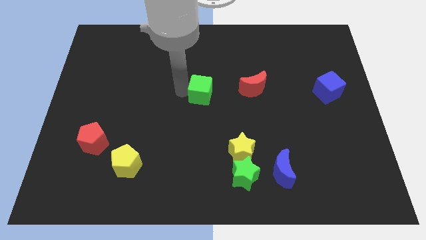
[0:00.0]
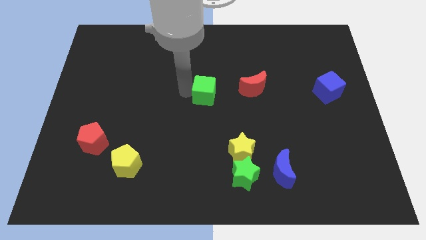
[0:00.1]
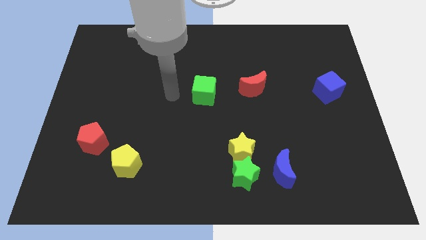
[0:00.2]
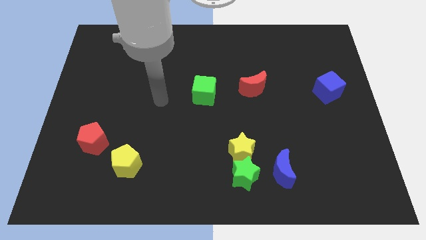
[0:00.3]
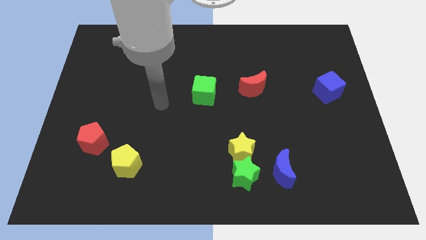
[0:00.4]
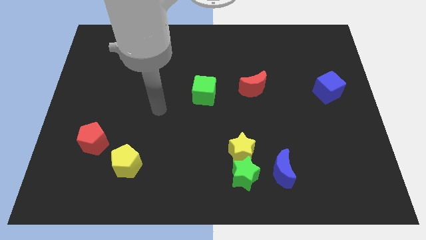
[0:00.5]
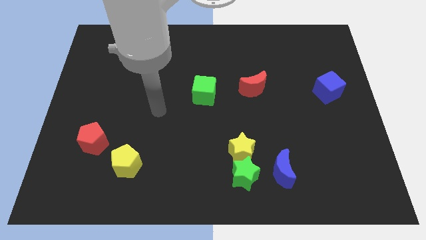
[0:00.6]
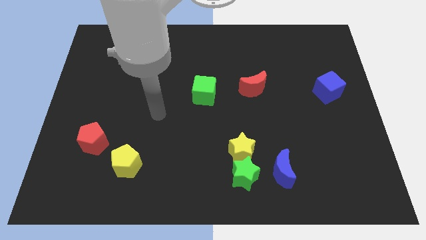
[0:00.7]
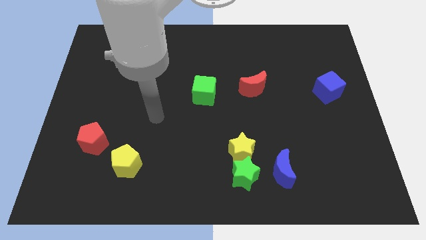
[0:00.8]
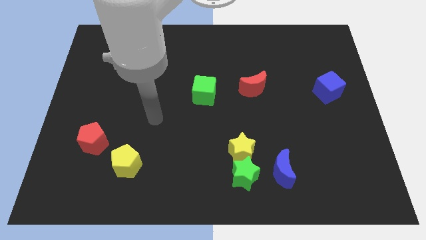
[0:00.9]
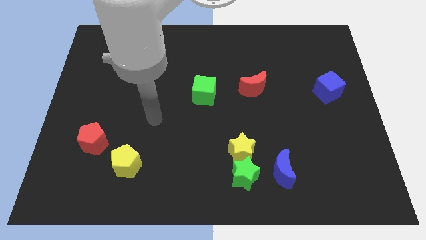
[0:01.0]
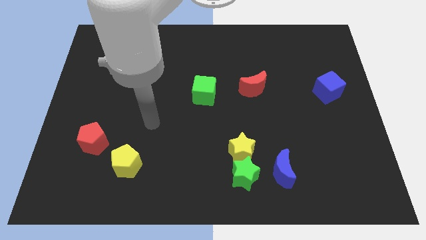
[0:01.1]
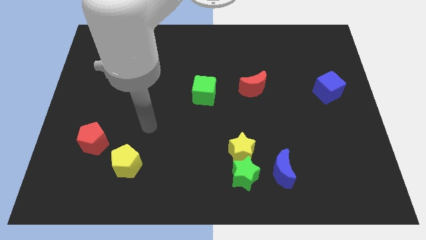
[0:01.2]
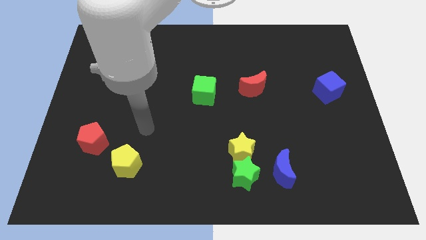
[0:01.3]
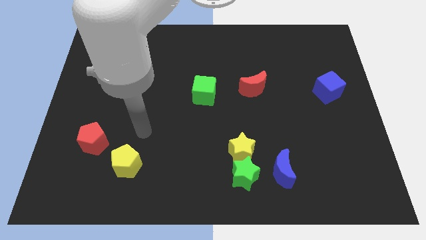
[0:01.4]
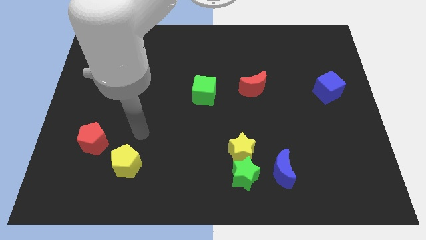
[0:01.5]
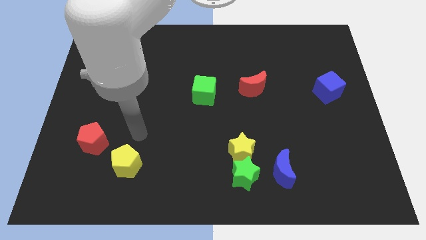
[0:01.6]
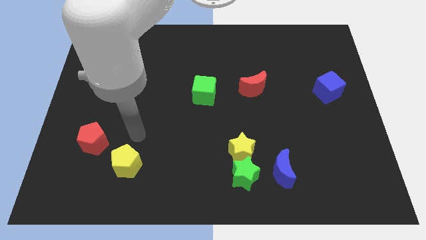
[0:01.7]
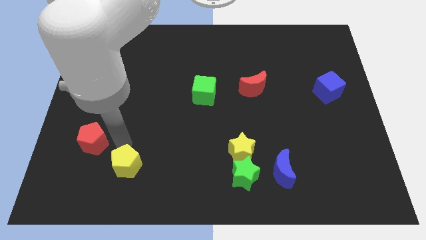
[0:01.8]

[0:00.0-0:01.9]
place your arm to the top of yellow pentagon

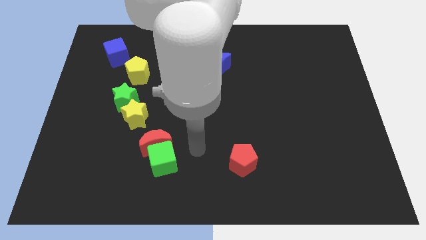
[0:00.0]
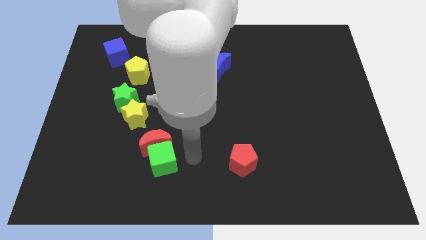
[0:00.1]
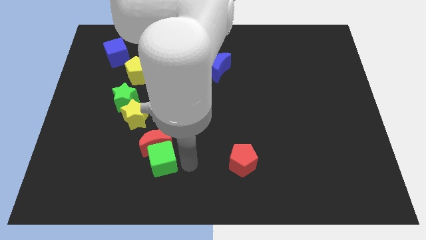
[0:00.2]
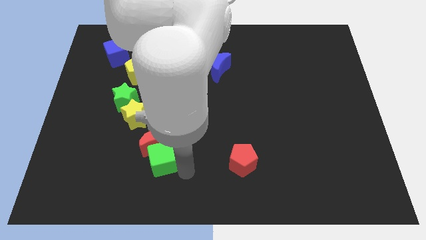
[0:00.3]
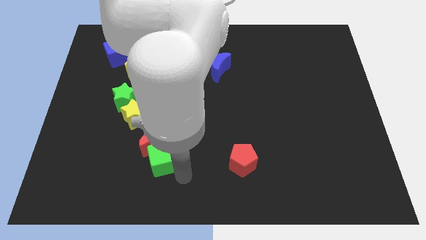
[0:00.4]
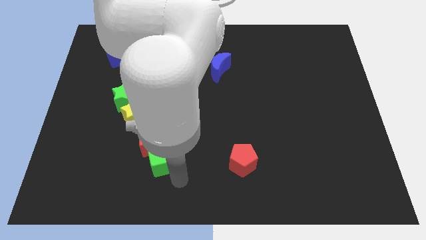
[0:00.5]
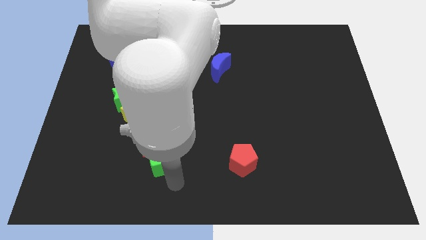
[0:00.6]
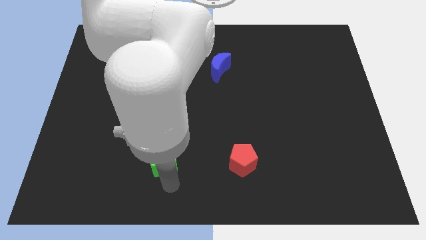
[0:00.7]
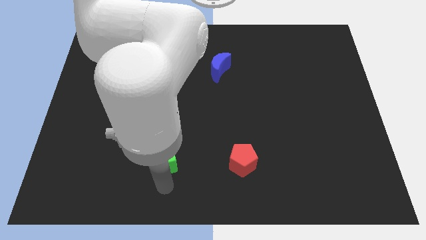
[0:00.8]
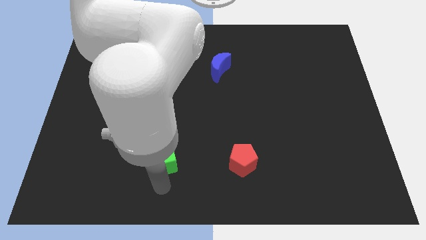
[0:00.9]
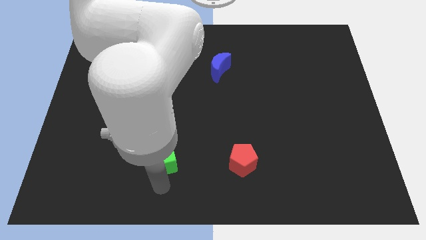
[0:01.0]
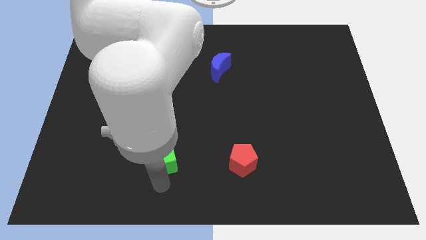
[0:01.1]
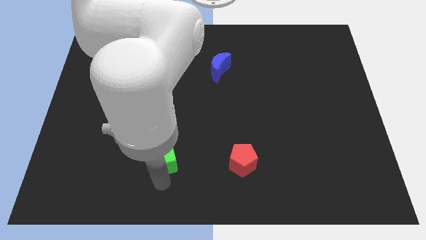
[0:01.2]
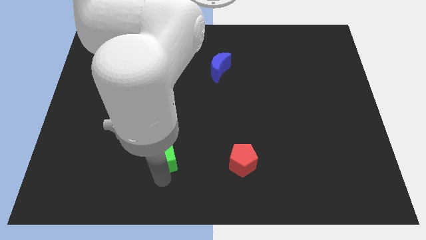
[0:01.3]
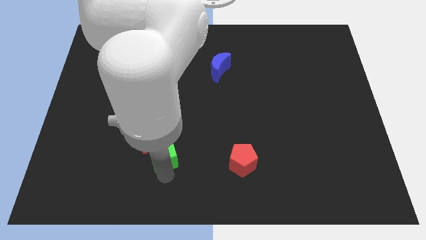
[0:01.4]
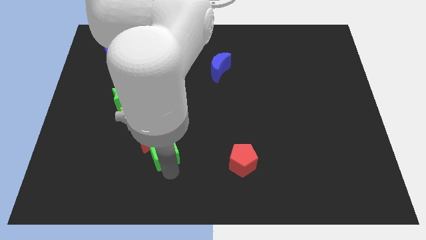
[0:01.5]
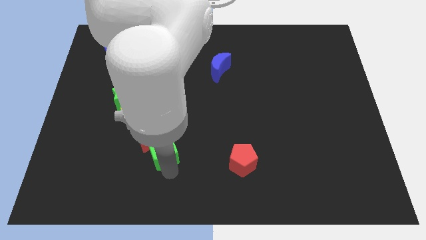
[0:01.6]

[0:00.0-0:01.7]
move the arm to the bottom of the green cube

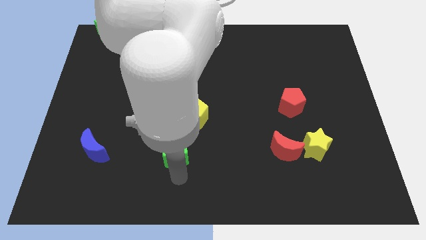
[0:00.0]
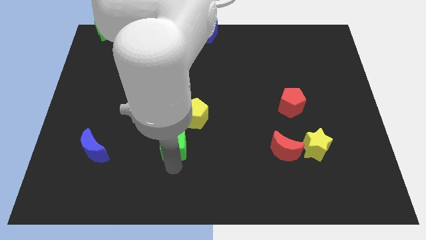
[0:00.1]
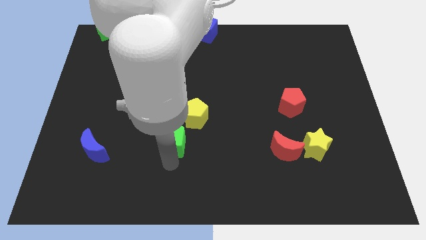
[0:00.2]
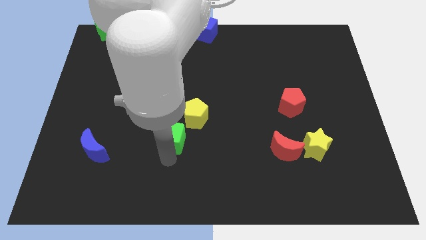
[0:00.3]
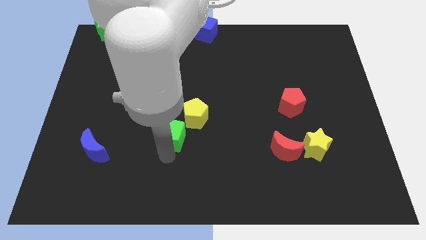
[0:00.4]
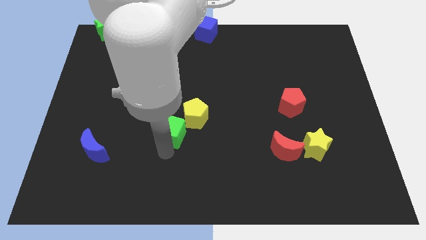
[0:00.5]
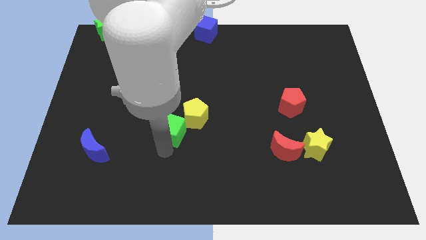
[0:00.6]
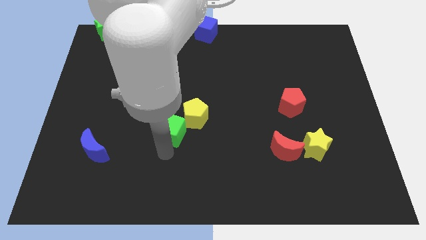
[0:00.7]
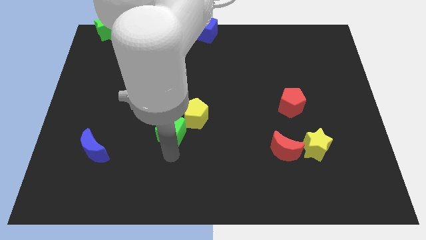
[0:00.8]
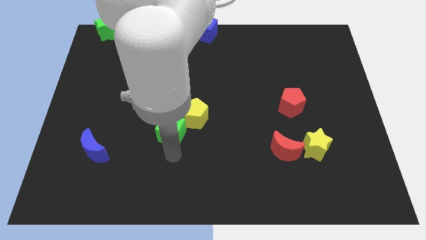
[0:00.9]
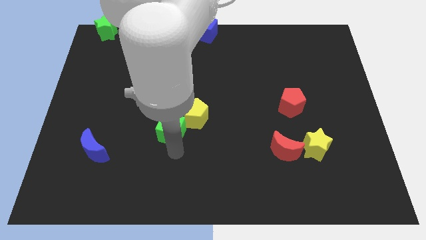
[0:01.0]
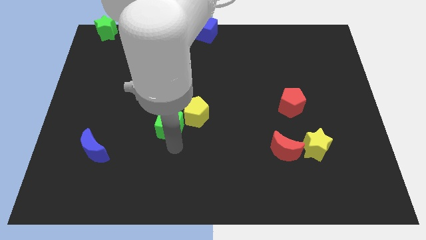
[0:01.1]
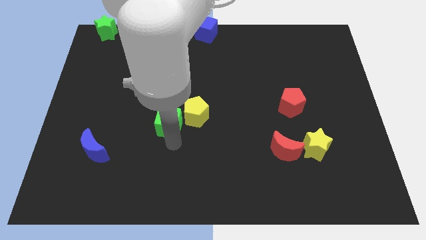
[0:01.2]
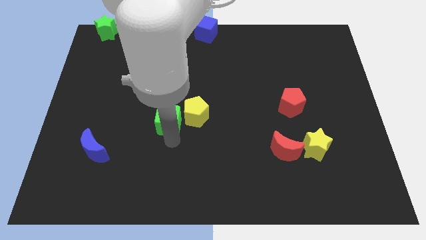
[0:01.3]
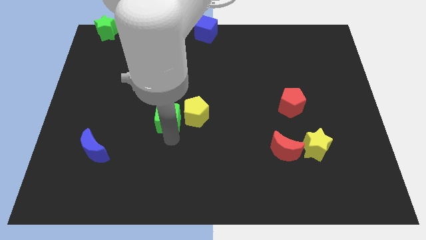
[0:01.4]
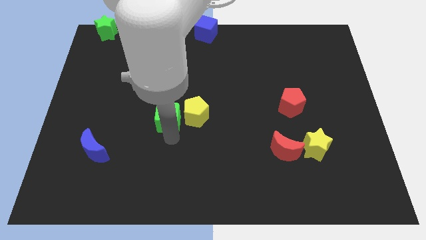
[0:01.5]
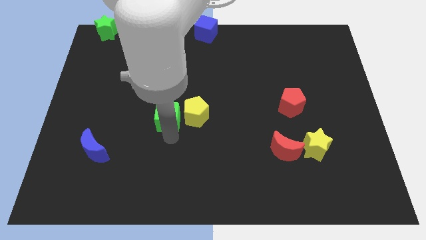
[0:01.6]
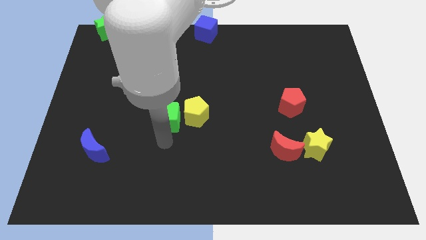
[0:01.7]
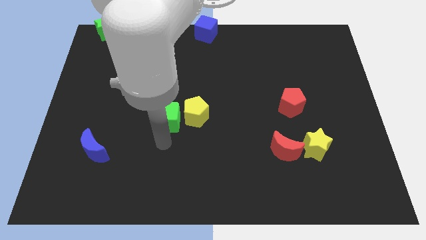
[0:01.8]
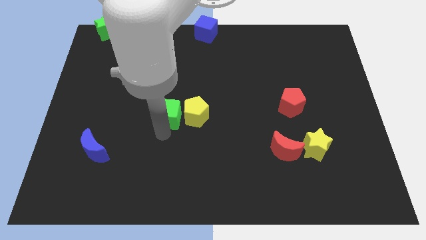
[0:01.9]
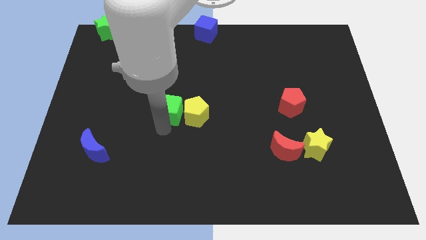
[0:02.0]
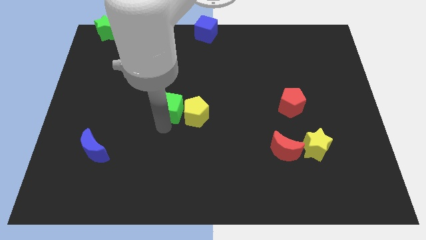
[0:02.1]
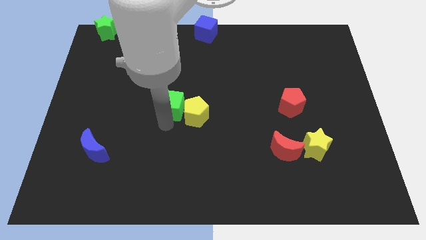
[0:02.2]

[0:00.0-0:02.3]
put the green cube left to the yellow pentagon

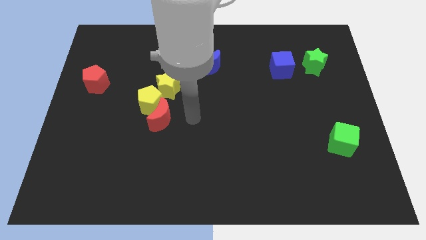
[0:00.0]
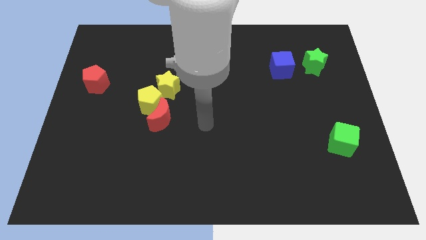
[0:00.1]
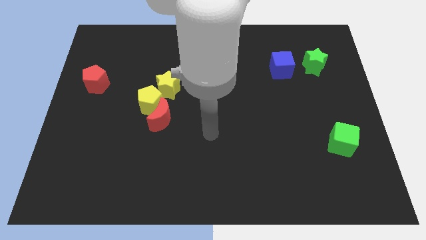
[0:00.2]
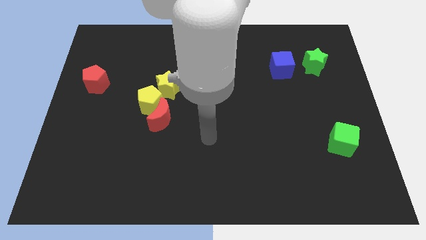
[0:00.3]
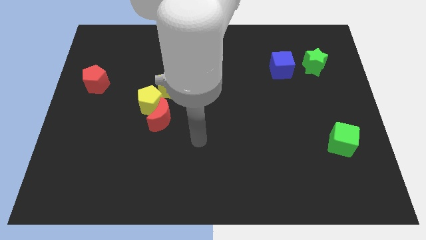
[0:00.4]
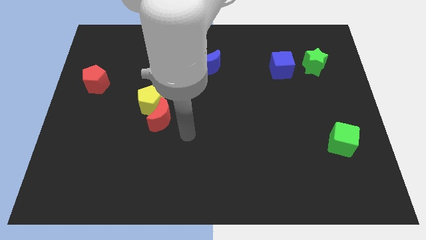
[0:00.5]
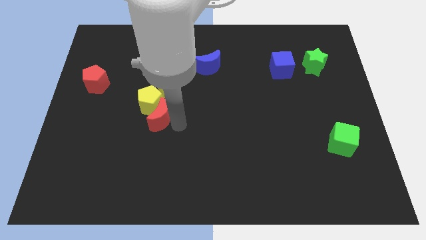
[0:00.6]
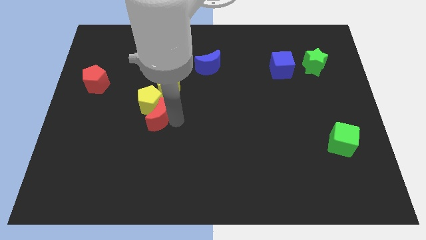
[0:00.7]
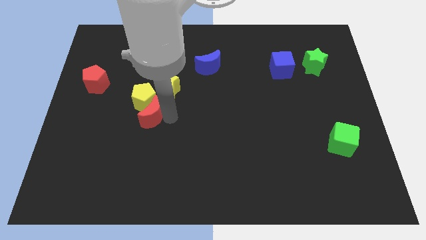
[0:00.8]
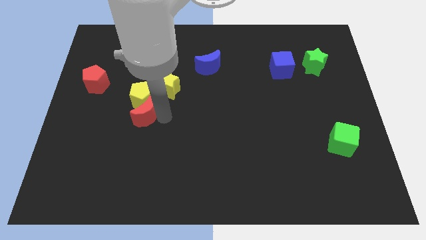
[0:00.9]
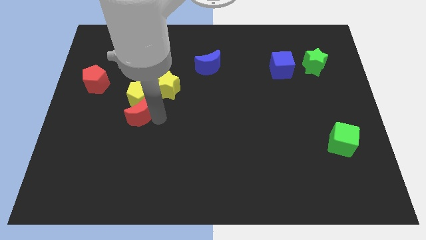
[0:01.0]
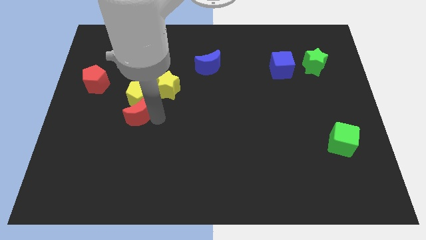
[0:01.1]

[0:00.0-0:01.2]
slightly push red moon and the yellow pentagon upwards of the board

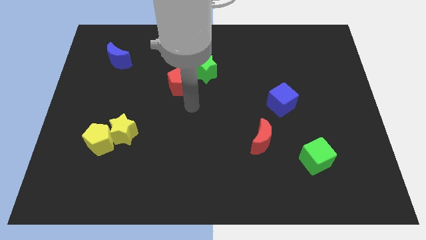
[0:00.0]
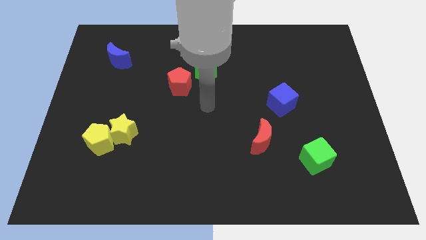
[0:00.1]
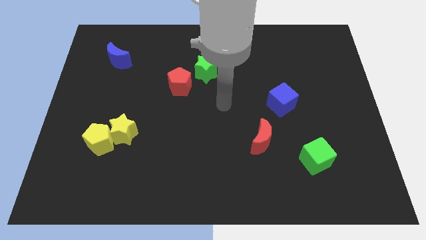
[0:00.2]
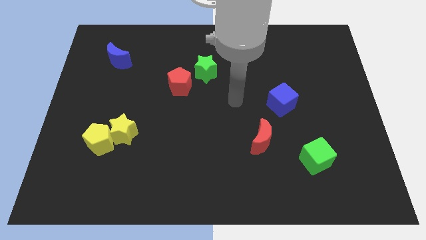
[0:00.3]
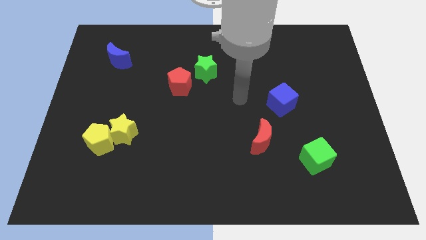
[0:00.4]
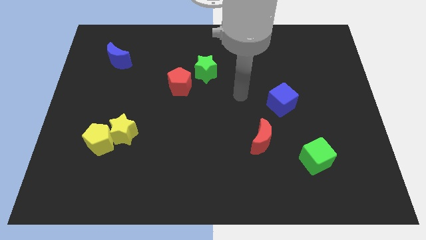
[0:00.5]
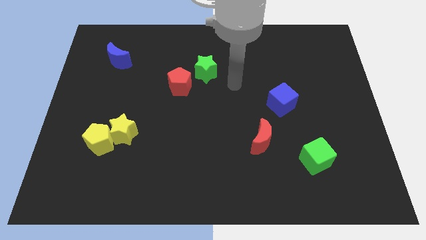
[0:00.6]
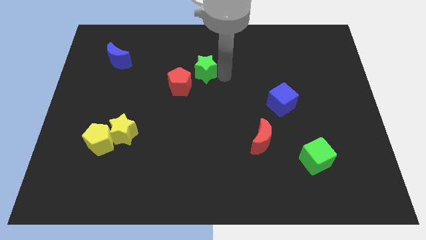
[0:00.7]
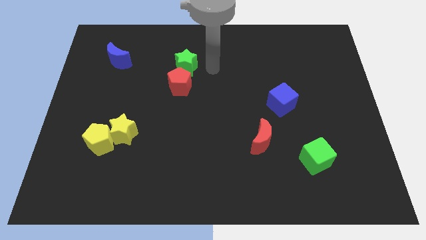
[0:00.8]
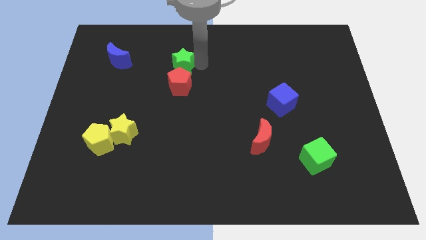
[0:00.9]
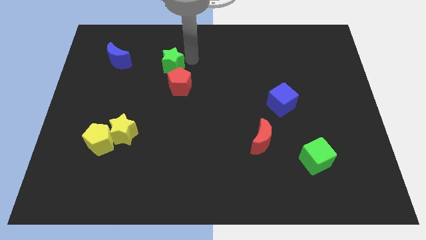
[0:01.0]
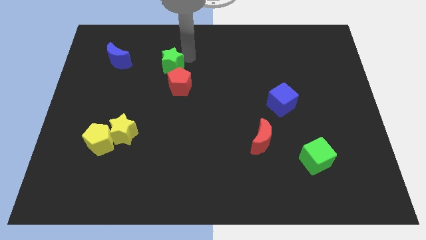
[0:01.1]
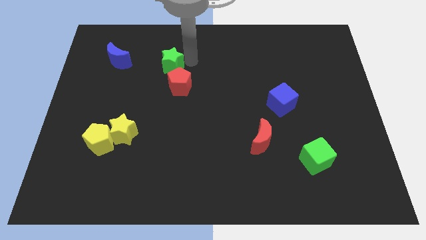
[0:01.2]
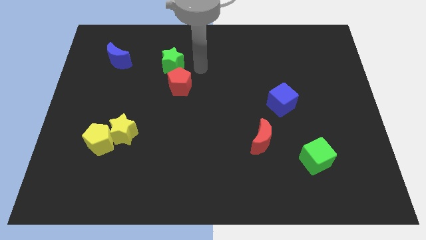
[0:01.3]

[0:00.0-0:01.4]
move the green star above the red pentagon

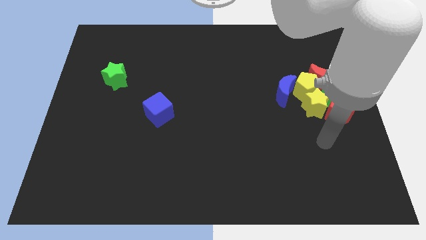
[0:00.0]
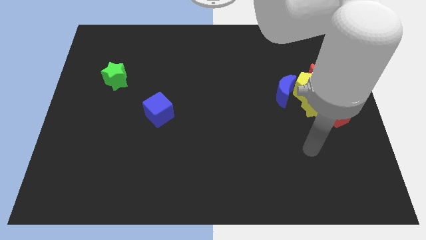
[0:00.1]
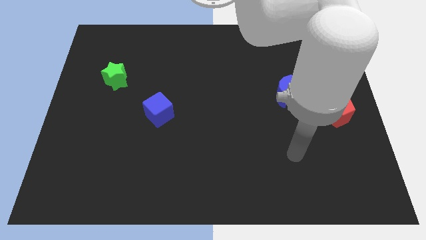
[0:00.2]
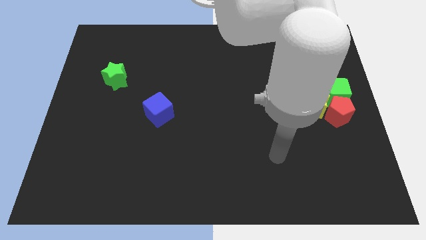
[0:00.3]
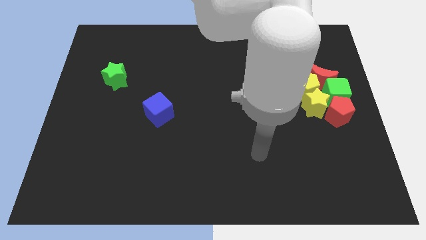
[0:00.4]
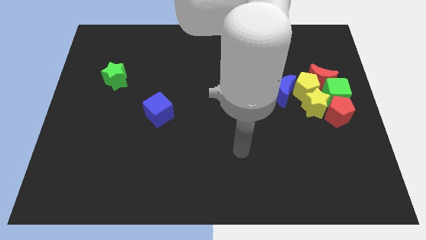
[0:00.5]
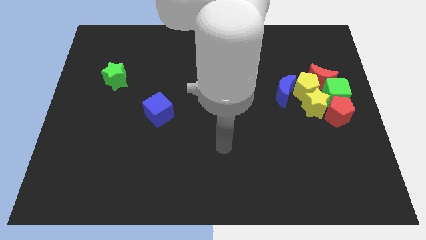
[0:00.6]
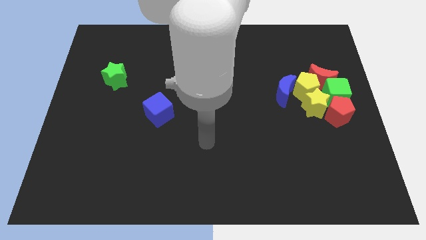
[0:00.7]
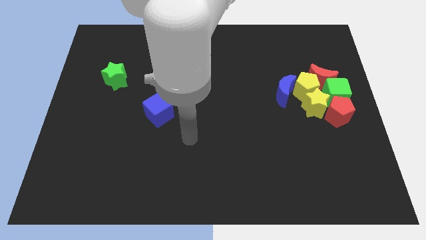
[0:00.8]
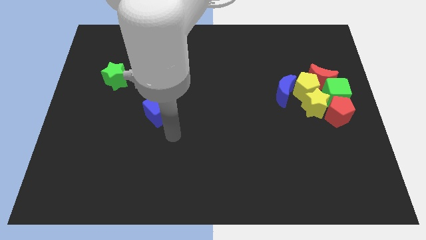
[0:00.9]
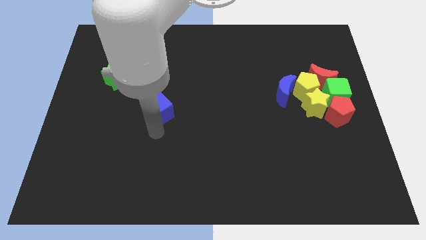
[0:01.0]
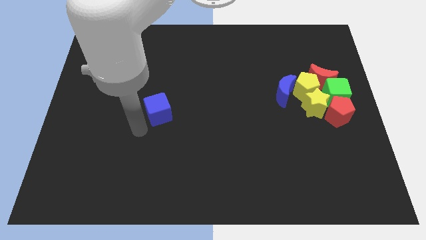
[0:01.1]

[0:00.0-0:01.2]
slightly push the blue cube on the board
